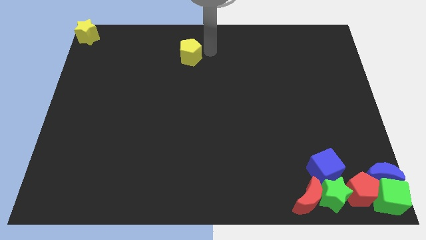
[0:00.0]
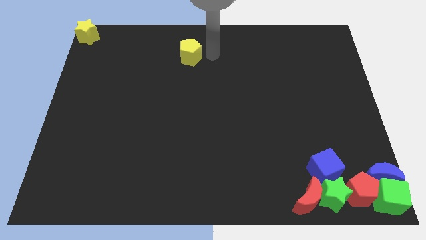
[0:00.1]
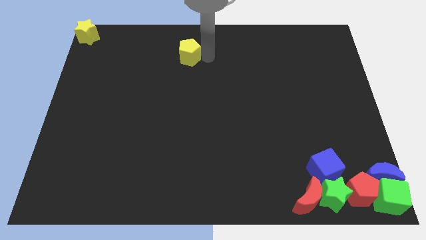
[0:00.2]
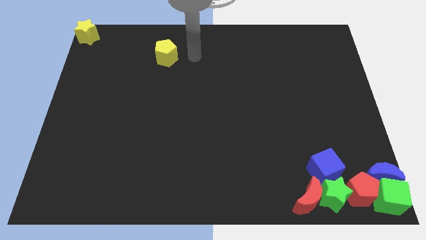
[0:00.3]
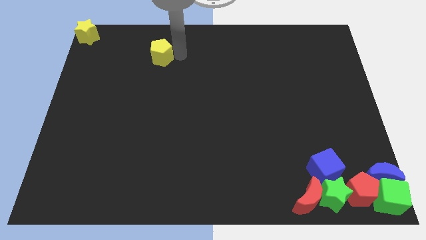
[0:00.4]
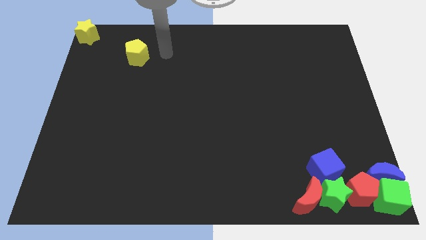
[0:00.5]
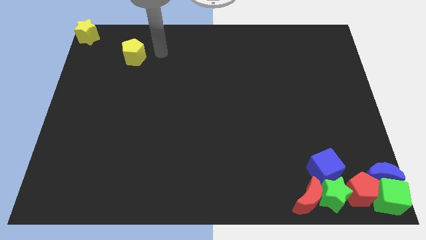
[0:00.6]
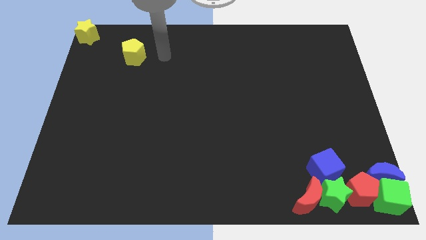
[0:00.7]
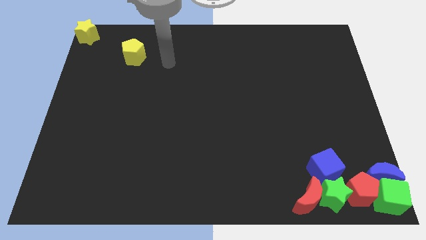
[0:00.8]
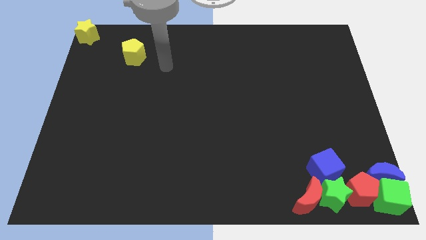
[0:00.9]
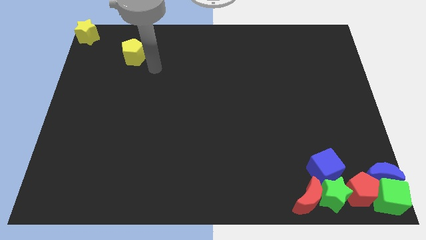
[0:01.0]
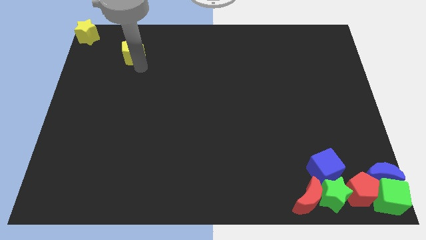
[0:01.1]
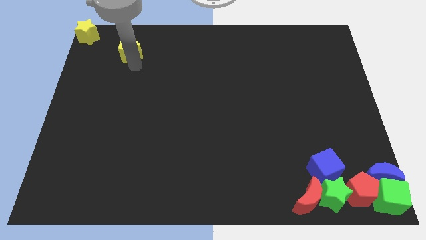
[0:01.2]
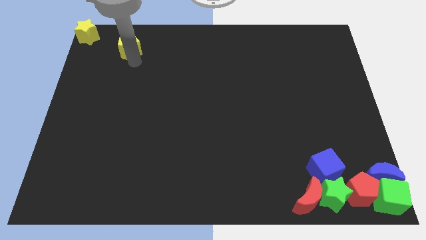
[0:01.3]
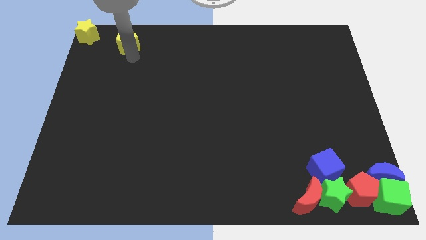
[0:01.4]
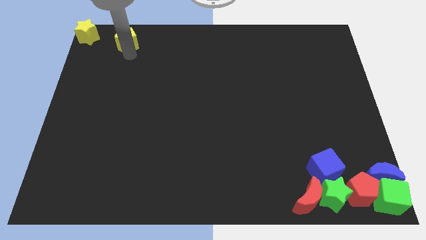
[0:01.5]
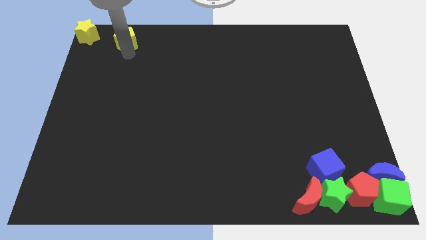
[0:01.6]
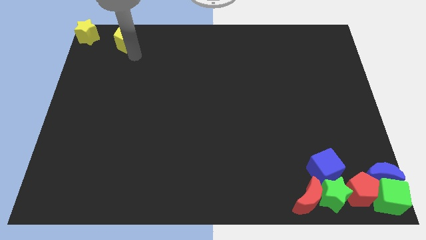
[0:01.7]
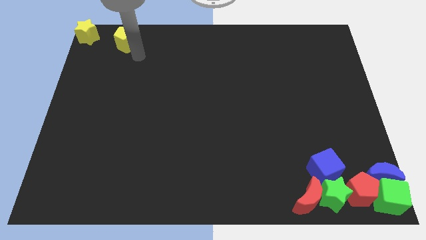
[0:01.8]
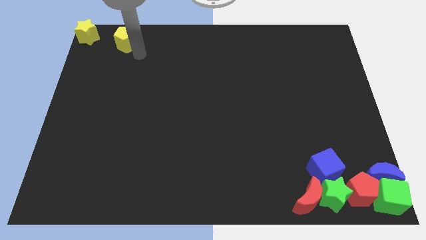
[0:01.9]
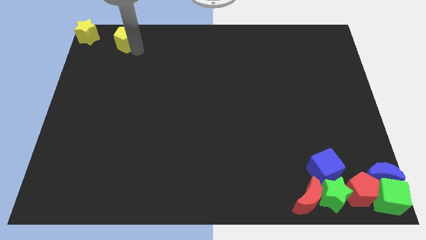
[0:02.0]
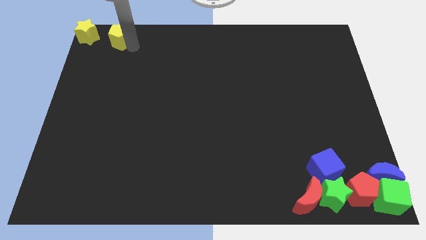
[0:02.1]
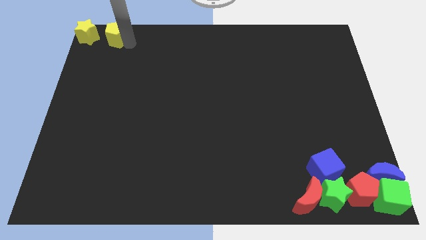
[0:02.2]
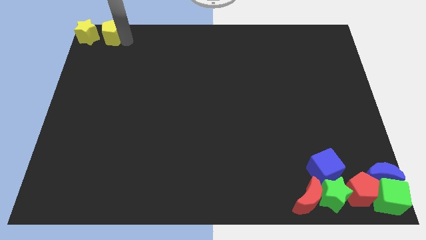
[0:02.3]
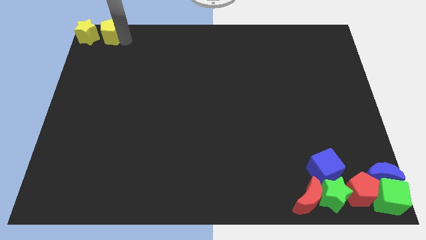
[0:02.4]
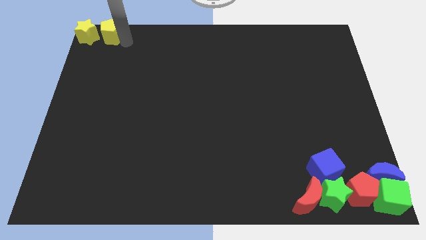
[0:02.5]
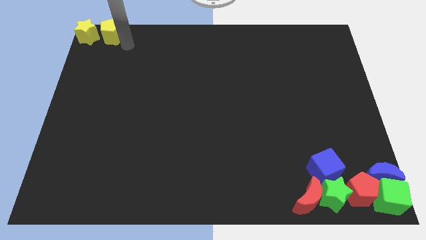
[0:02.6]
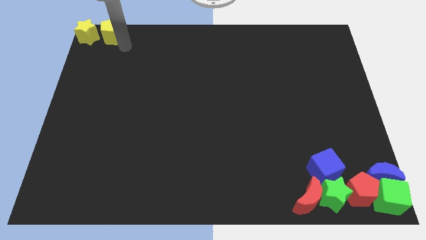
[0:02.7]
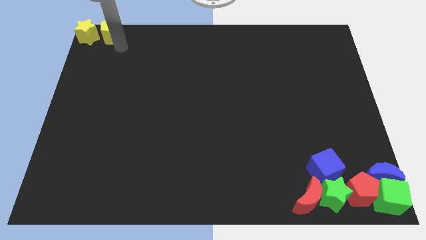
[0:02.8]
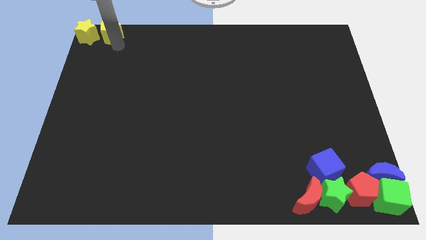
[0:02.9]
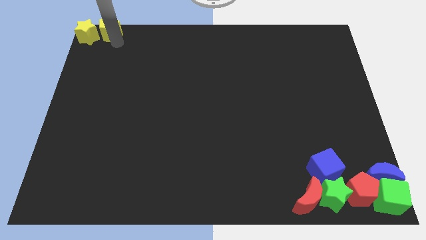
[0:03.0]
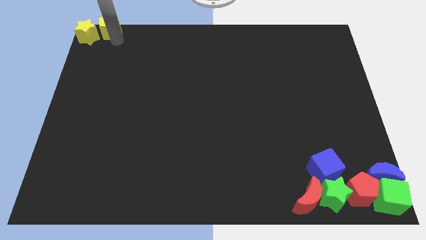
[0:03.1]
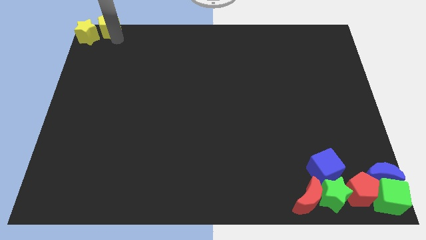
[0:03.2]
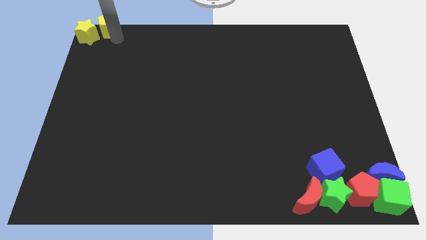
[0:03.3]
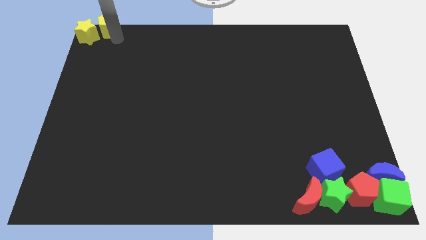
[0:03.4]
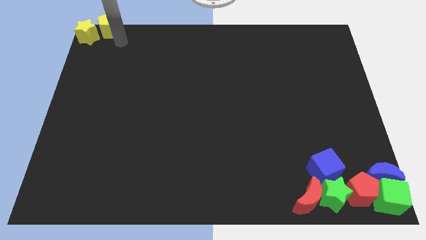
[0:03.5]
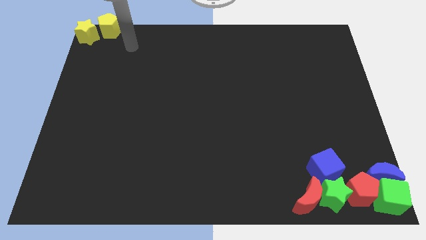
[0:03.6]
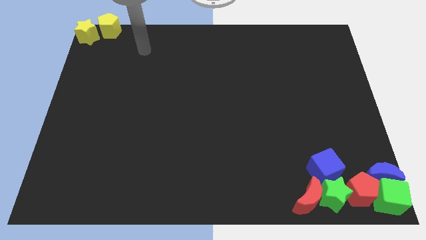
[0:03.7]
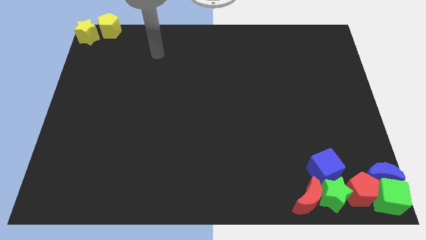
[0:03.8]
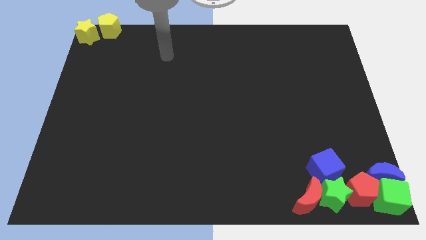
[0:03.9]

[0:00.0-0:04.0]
move the yellow pentagon close to the yellow star

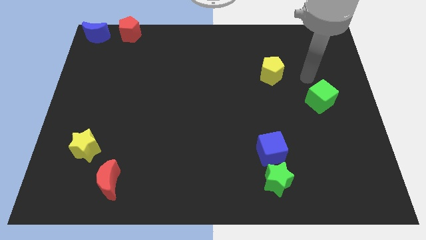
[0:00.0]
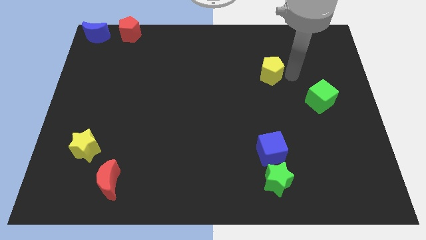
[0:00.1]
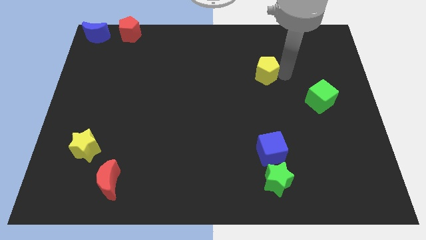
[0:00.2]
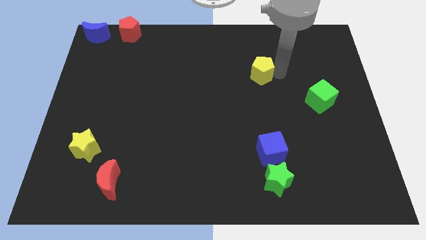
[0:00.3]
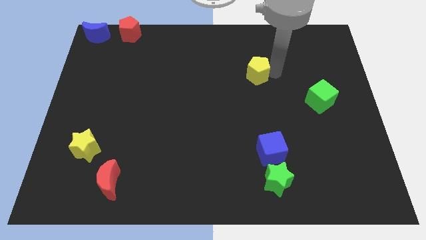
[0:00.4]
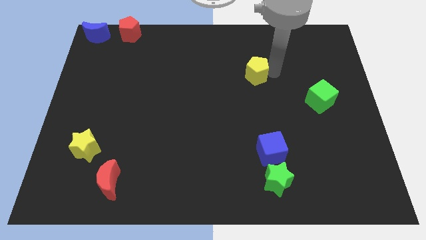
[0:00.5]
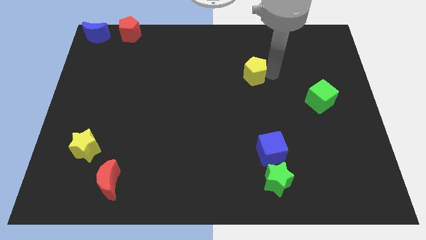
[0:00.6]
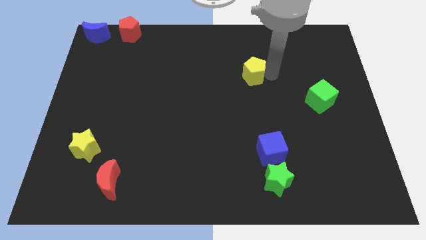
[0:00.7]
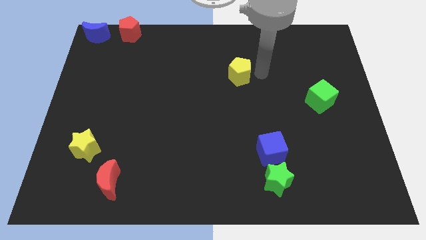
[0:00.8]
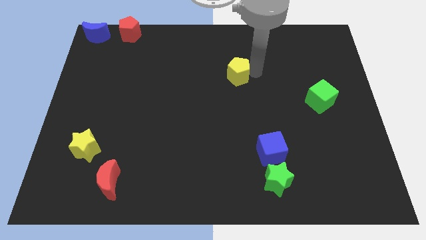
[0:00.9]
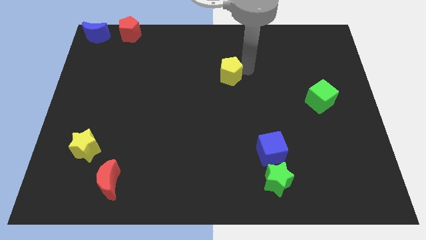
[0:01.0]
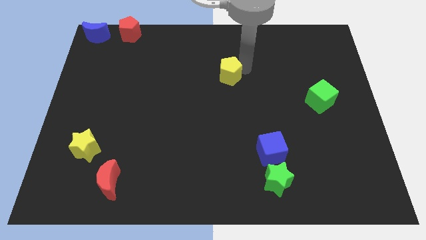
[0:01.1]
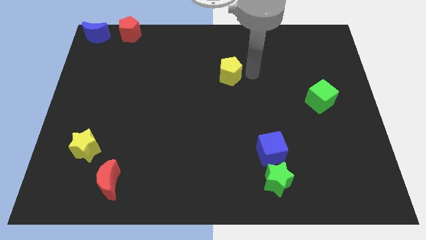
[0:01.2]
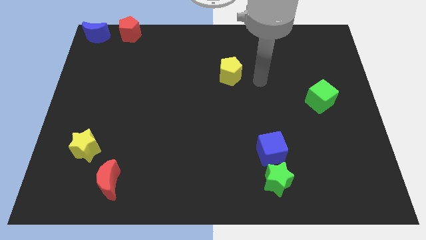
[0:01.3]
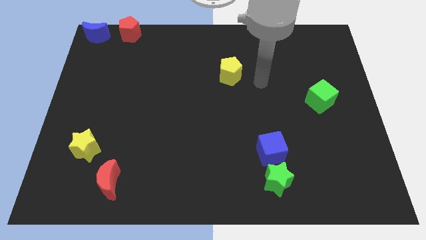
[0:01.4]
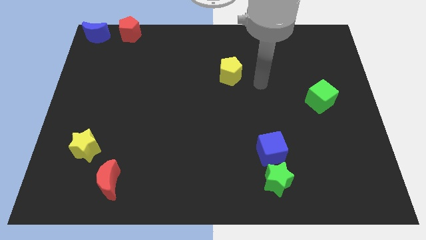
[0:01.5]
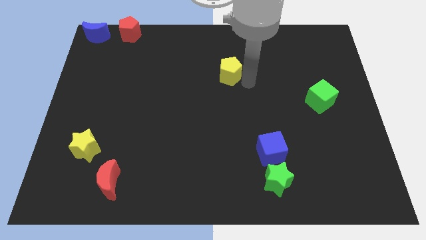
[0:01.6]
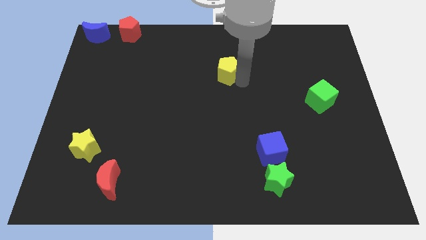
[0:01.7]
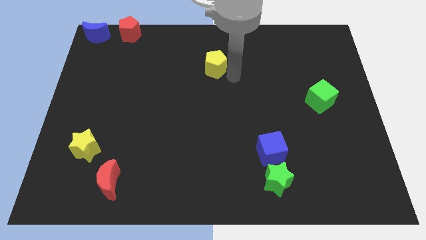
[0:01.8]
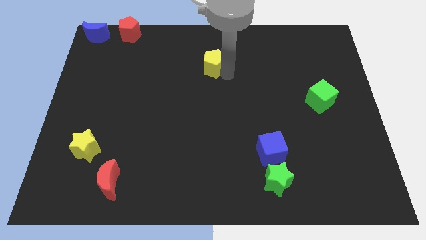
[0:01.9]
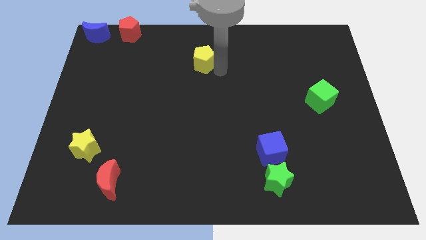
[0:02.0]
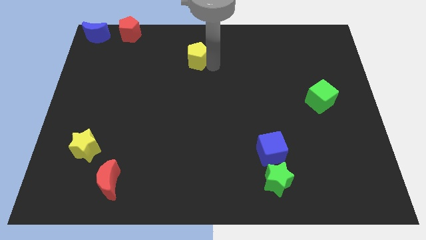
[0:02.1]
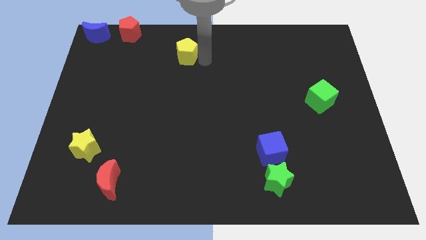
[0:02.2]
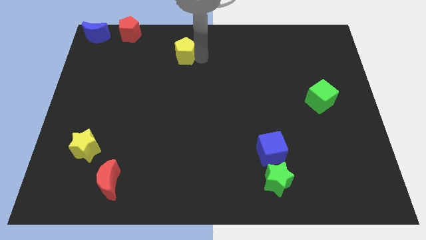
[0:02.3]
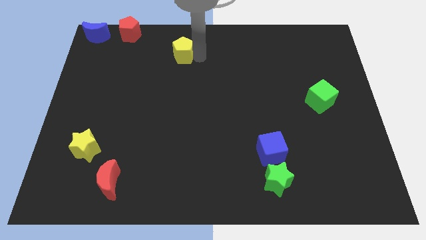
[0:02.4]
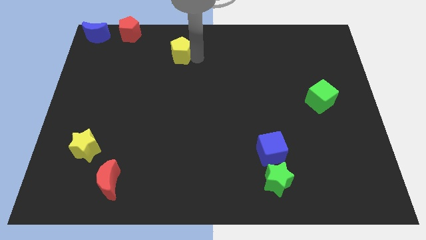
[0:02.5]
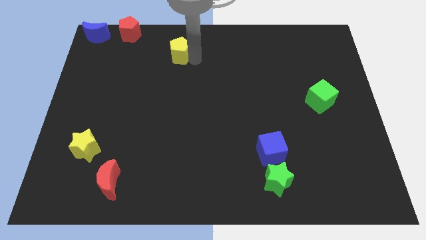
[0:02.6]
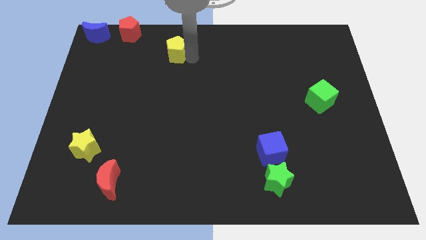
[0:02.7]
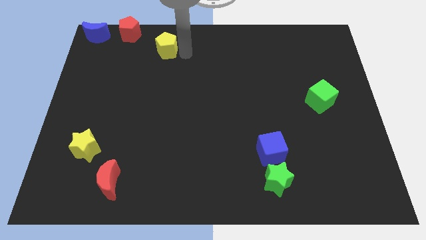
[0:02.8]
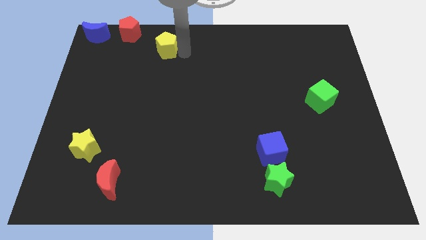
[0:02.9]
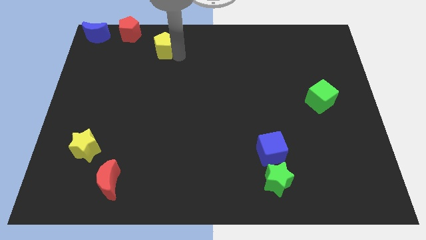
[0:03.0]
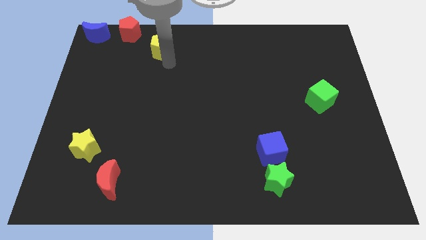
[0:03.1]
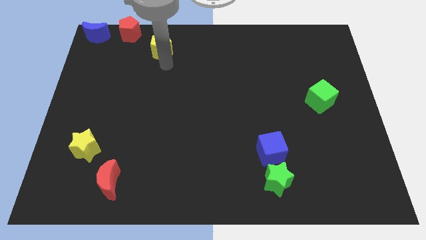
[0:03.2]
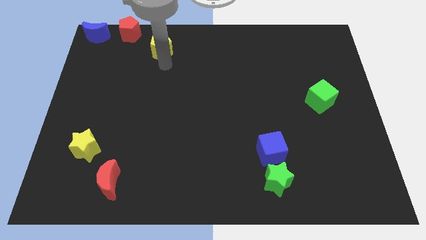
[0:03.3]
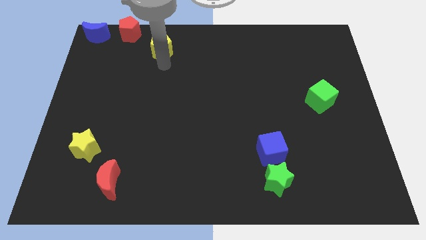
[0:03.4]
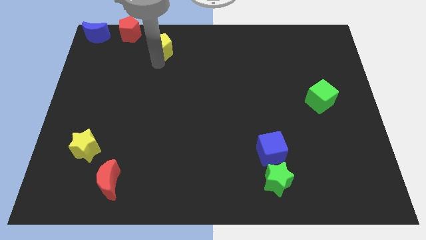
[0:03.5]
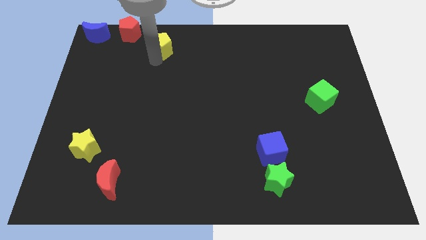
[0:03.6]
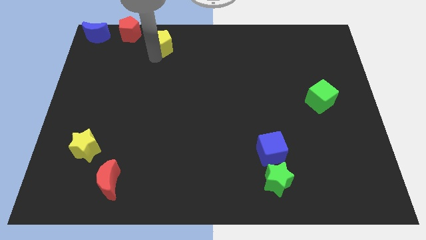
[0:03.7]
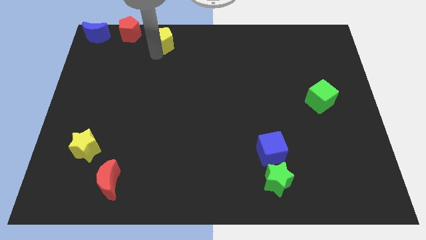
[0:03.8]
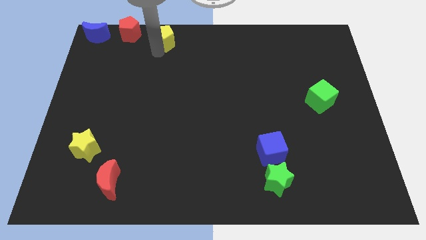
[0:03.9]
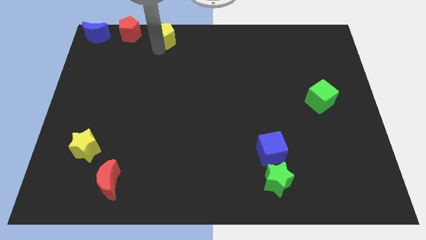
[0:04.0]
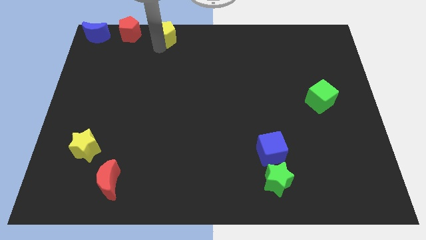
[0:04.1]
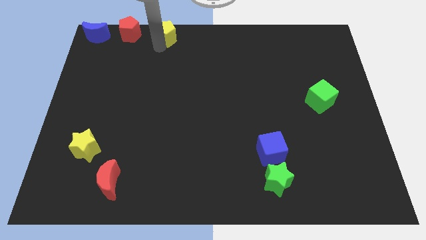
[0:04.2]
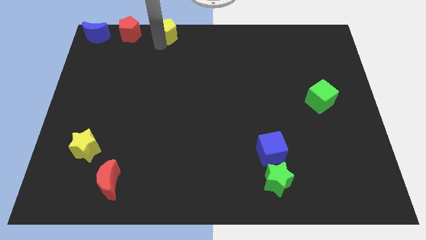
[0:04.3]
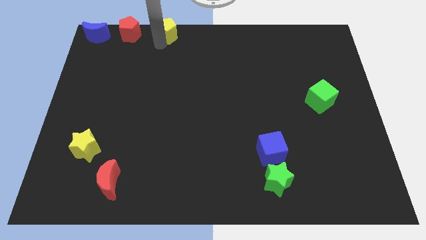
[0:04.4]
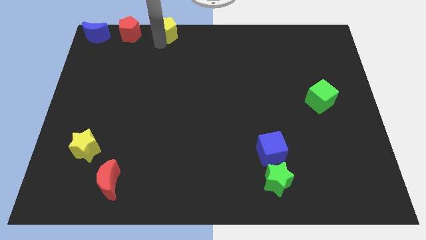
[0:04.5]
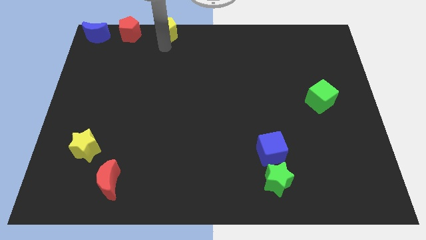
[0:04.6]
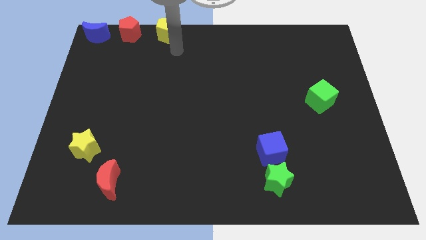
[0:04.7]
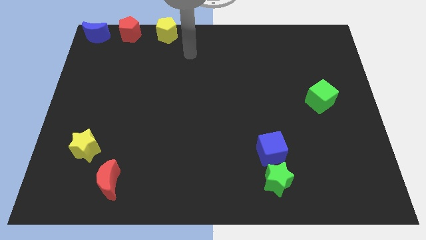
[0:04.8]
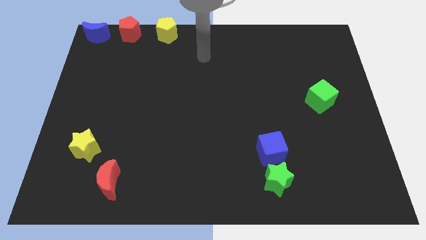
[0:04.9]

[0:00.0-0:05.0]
push the yellow pentagon to the right side of the red pentagon
